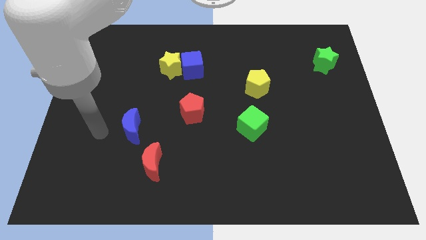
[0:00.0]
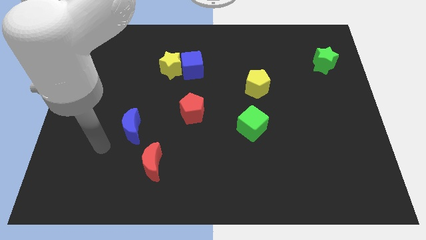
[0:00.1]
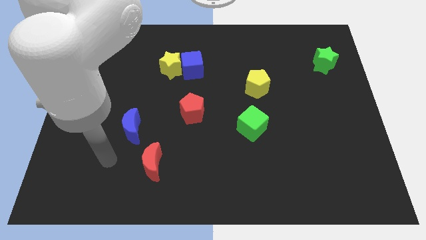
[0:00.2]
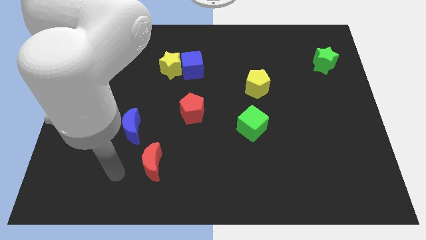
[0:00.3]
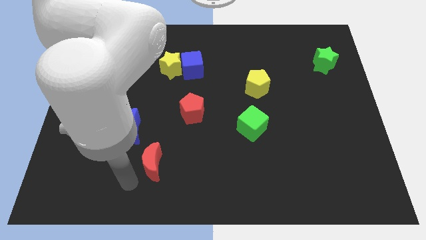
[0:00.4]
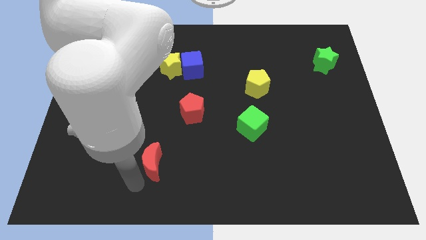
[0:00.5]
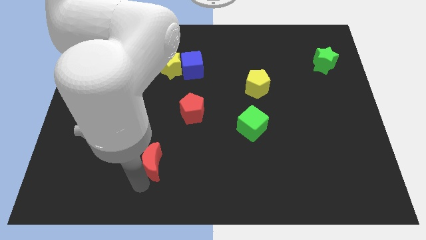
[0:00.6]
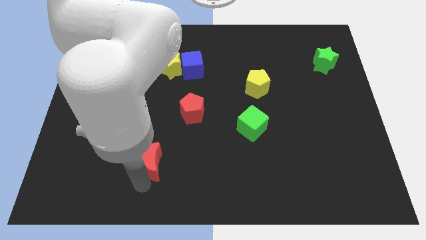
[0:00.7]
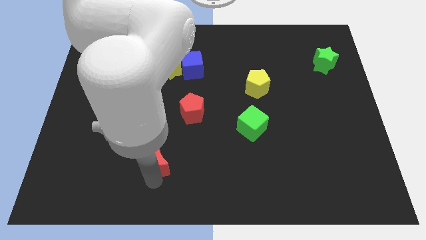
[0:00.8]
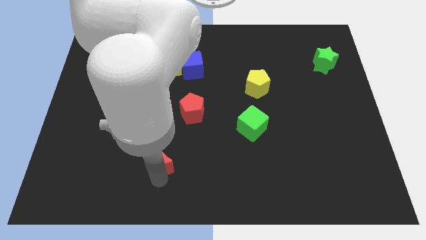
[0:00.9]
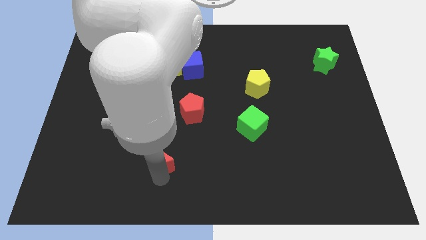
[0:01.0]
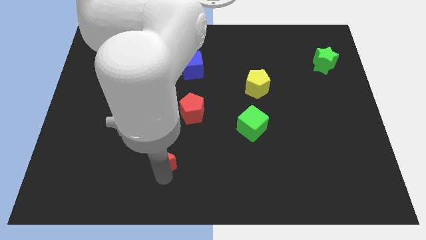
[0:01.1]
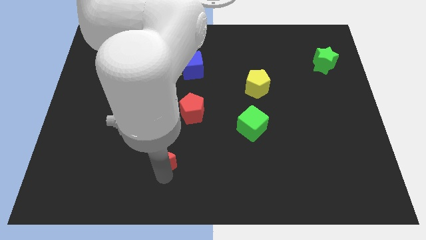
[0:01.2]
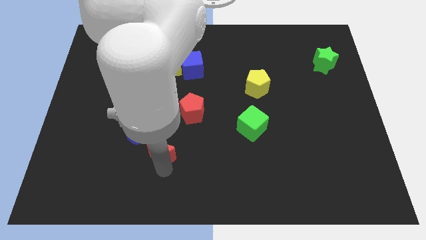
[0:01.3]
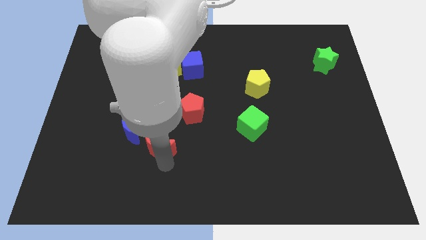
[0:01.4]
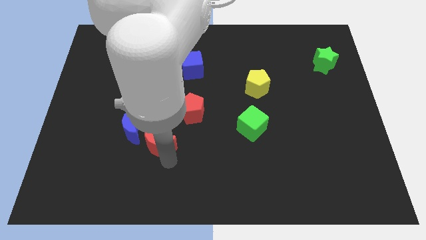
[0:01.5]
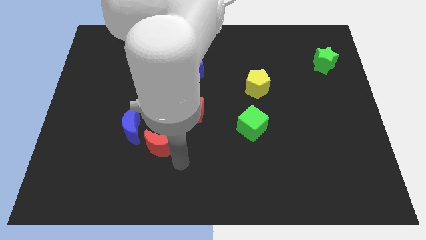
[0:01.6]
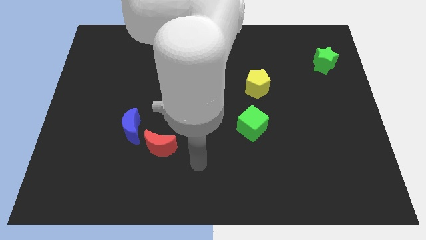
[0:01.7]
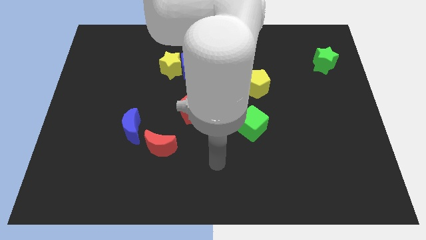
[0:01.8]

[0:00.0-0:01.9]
push the red moon to the right of blue moon

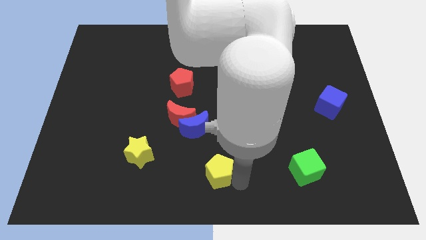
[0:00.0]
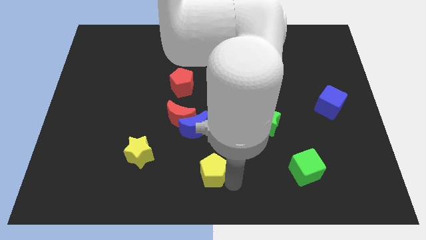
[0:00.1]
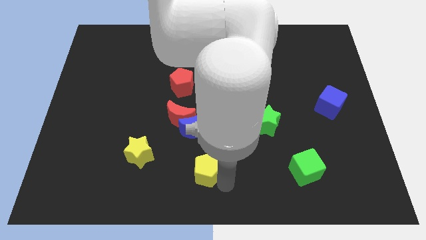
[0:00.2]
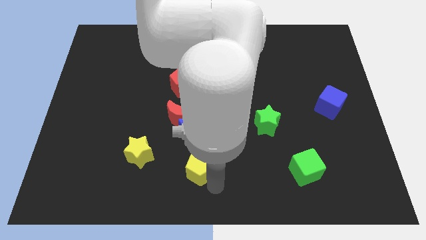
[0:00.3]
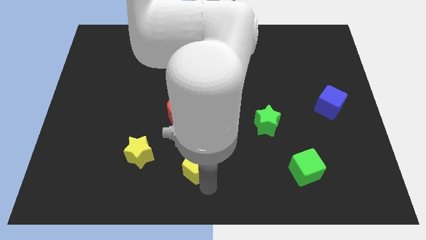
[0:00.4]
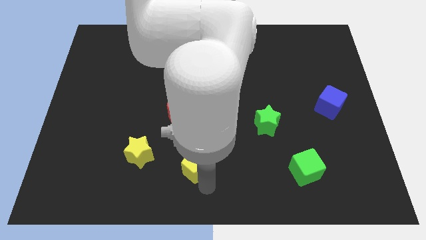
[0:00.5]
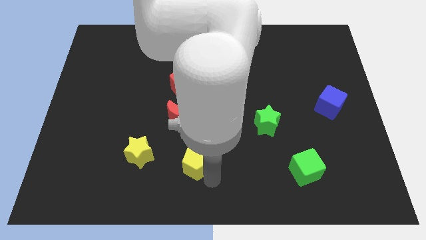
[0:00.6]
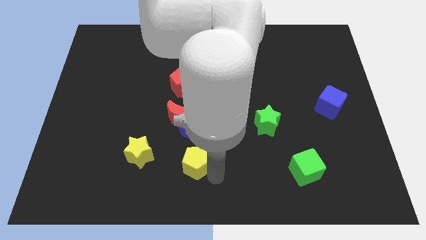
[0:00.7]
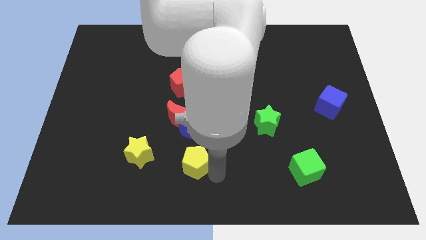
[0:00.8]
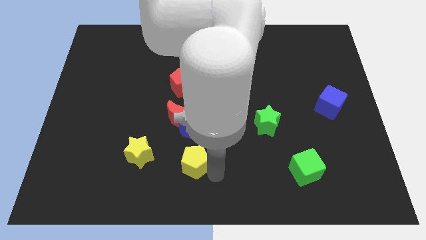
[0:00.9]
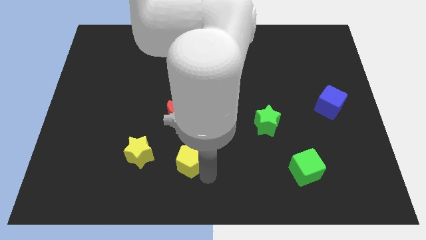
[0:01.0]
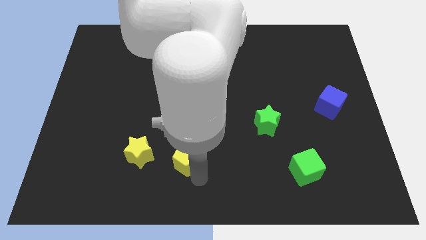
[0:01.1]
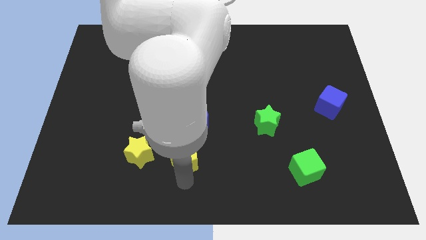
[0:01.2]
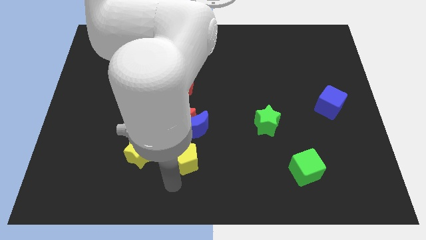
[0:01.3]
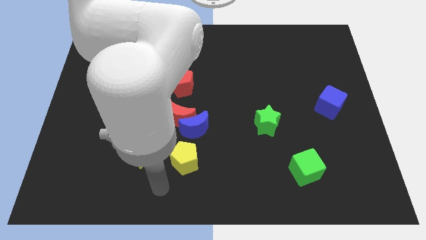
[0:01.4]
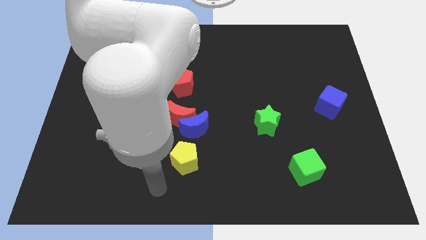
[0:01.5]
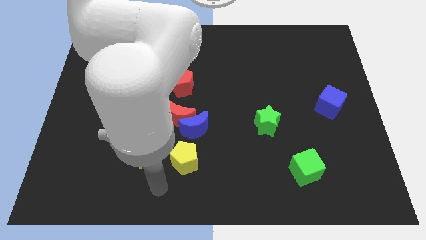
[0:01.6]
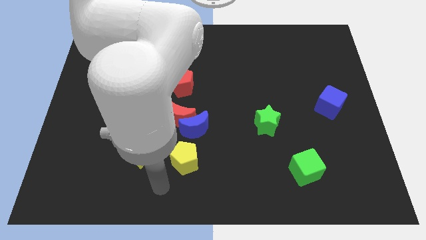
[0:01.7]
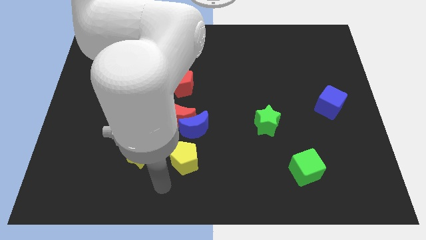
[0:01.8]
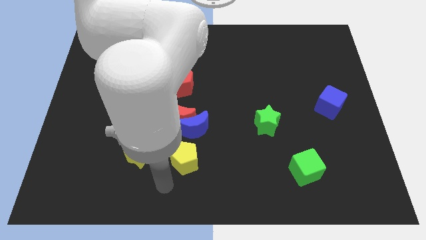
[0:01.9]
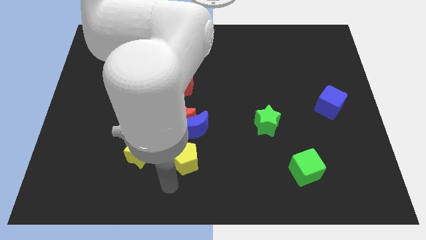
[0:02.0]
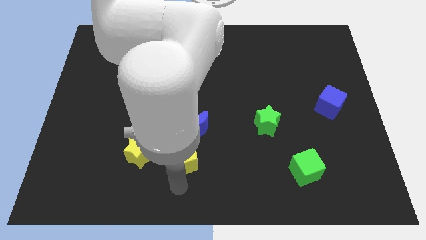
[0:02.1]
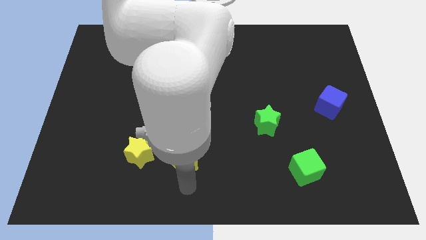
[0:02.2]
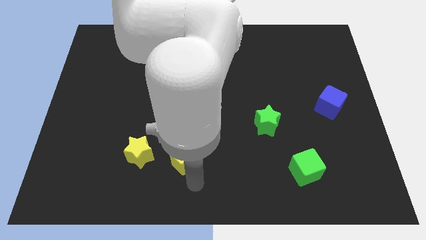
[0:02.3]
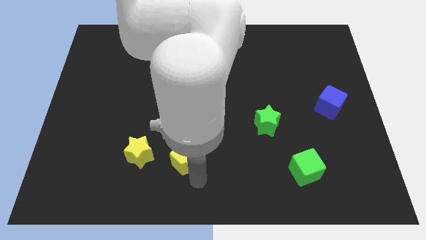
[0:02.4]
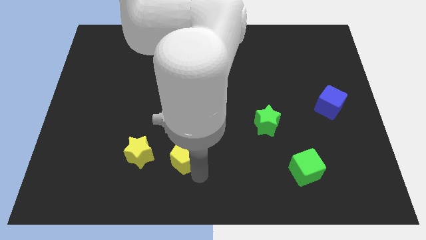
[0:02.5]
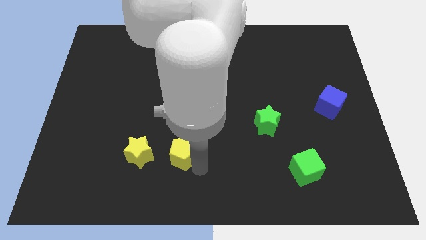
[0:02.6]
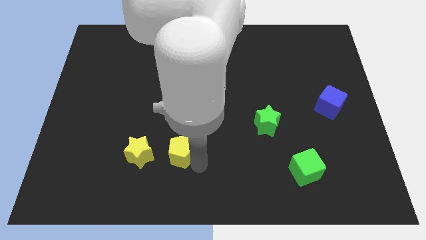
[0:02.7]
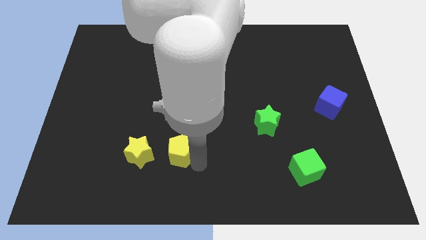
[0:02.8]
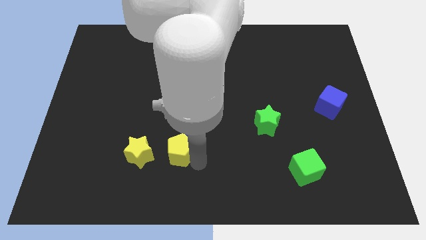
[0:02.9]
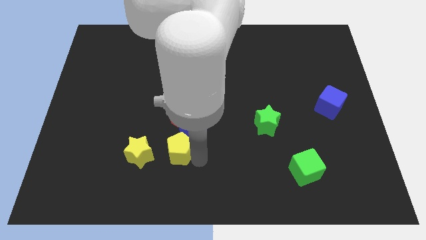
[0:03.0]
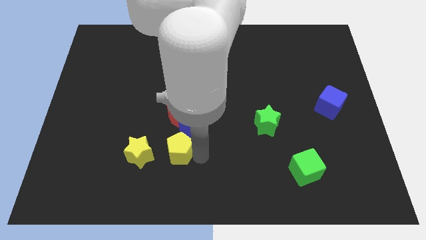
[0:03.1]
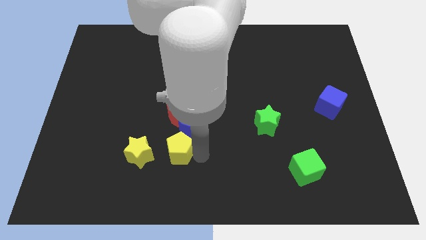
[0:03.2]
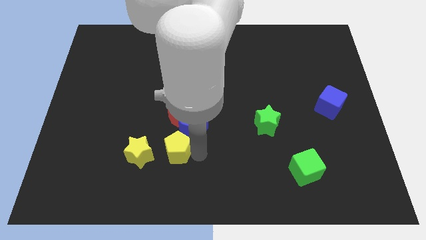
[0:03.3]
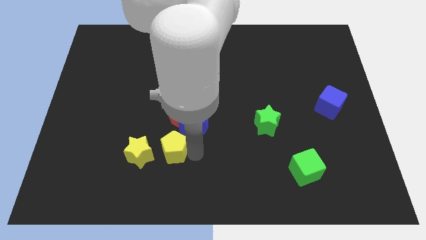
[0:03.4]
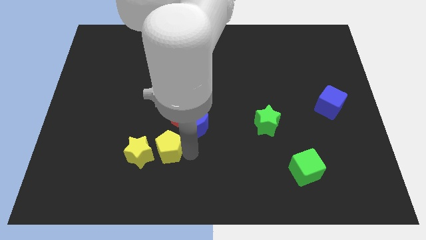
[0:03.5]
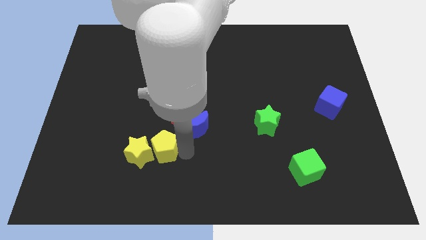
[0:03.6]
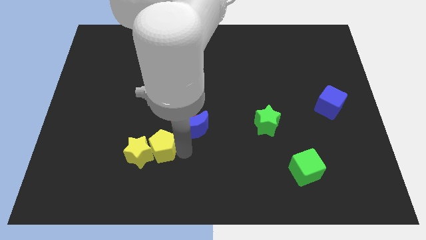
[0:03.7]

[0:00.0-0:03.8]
move the yellow pentagon right to the yellow star

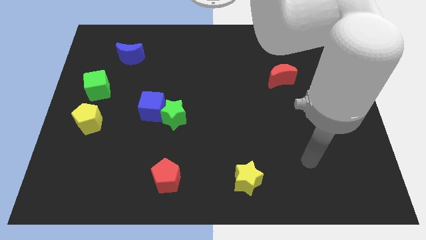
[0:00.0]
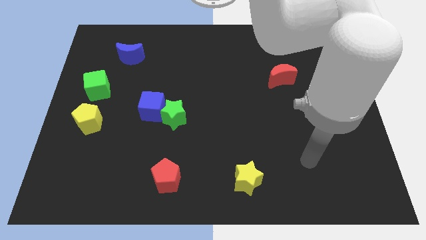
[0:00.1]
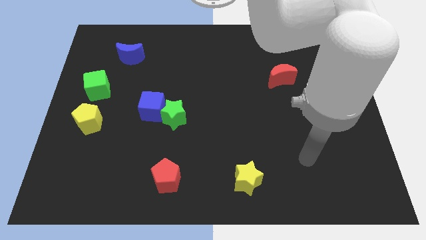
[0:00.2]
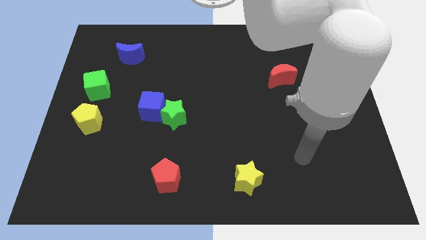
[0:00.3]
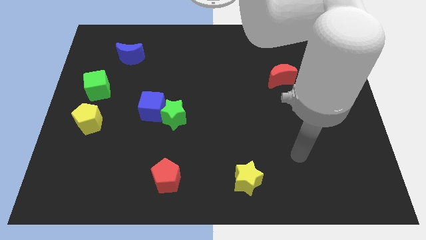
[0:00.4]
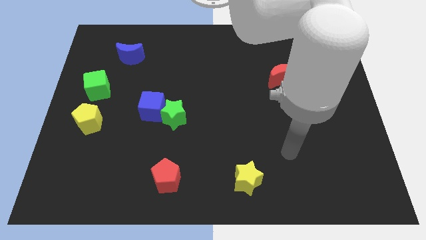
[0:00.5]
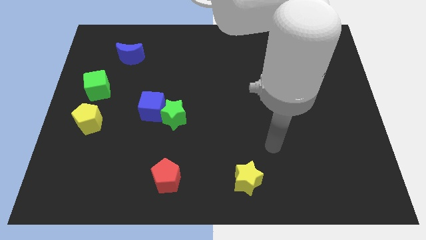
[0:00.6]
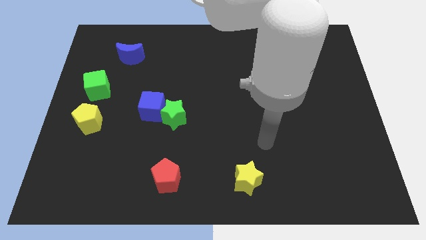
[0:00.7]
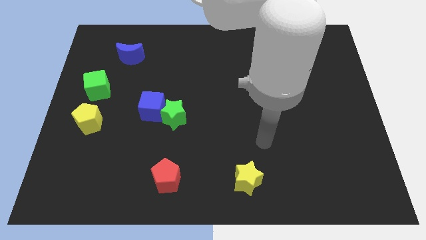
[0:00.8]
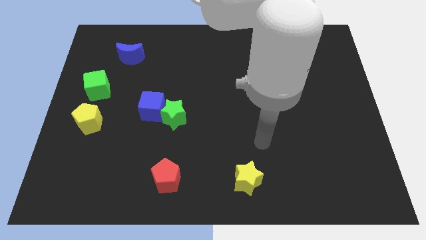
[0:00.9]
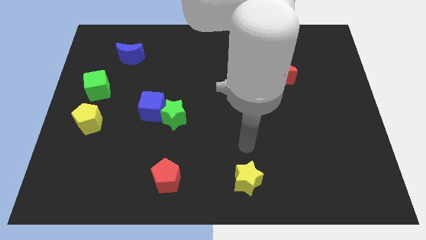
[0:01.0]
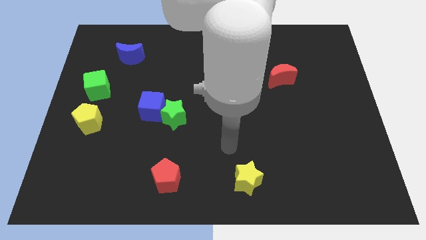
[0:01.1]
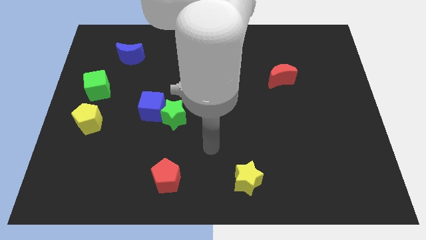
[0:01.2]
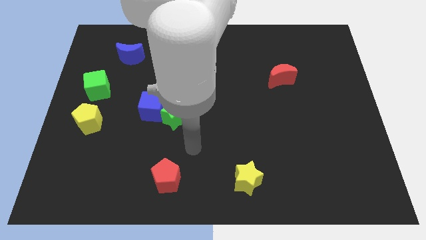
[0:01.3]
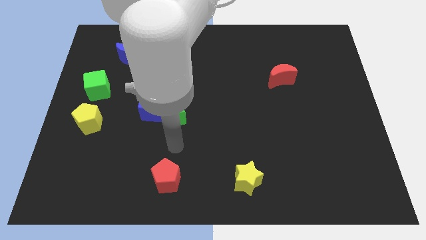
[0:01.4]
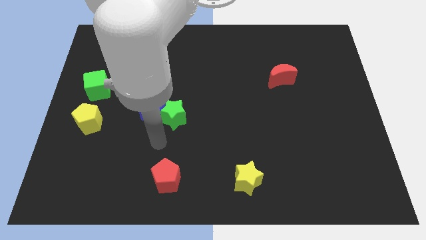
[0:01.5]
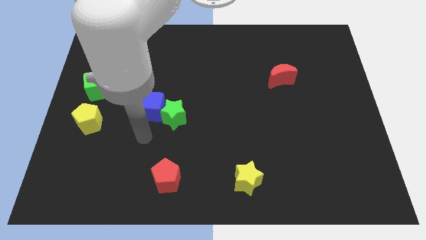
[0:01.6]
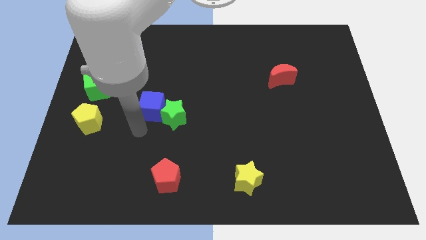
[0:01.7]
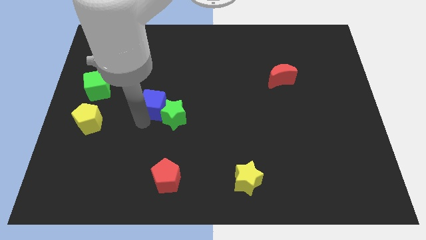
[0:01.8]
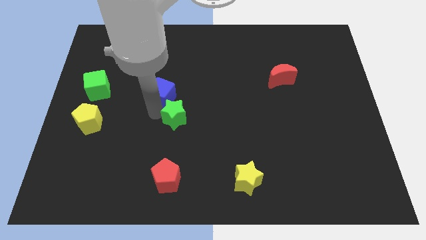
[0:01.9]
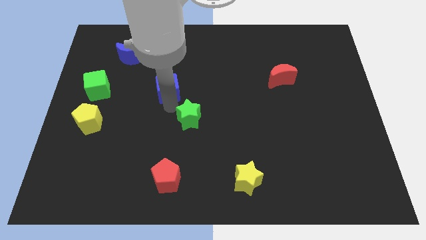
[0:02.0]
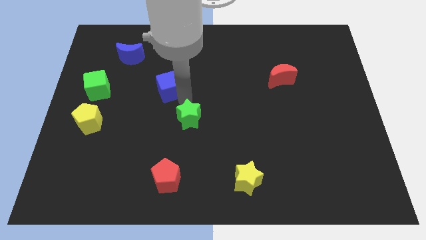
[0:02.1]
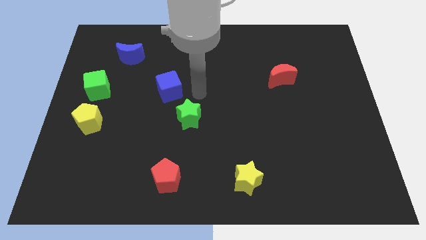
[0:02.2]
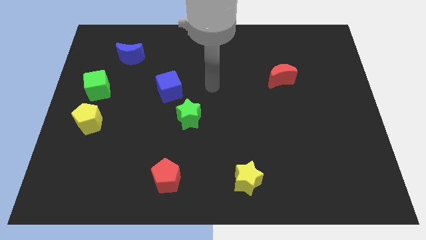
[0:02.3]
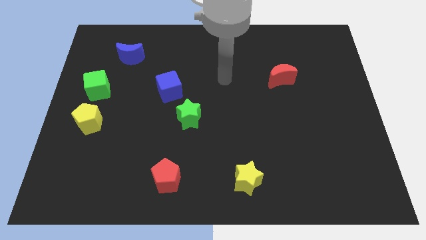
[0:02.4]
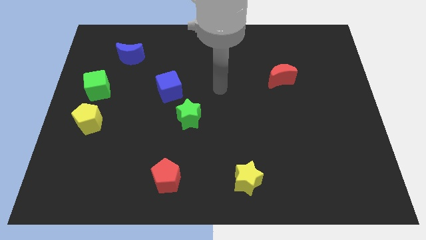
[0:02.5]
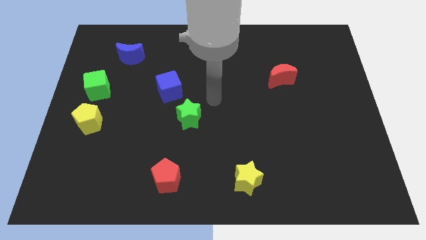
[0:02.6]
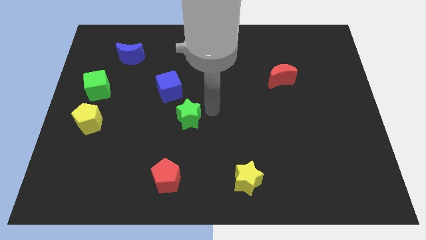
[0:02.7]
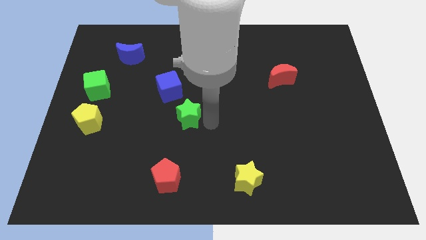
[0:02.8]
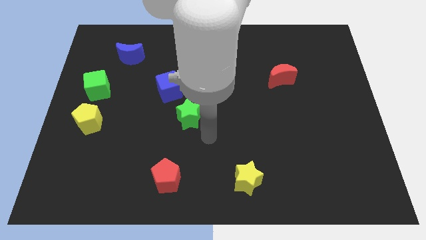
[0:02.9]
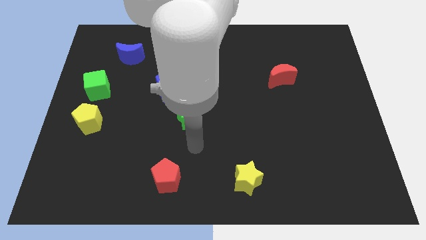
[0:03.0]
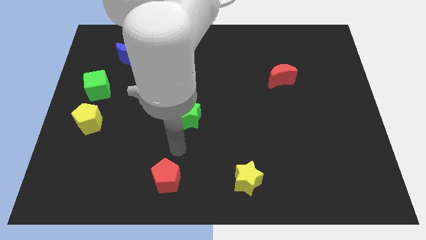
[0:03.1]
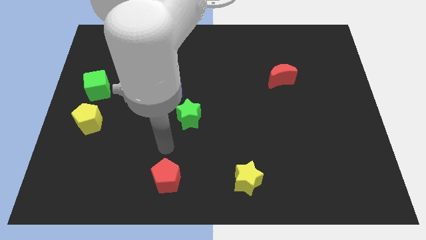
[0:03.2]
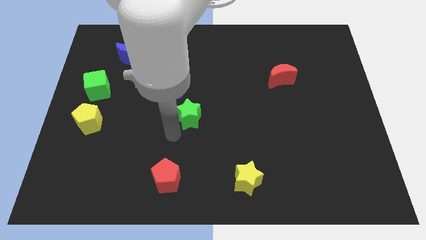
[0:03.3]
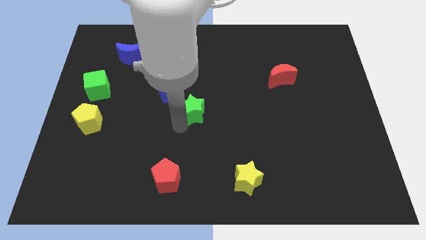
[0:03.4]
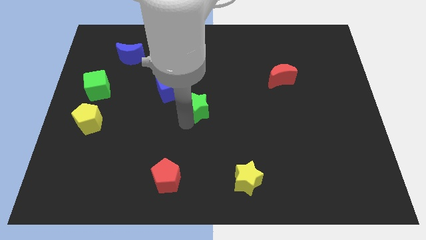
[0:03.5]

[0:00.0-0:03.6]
separate the green star and the blue cube
